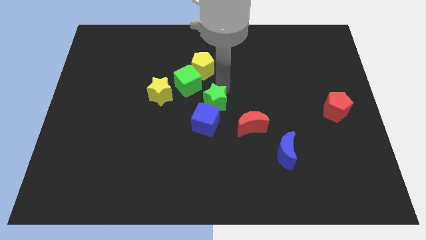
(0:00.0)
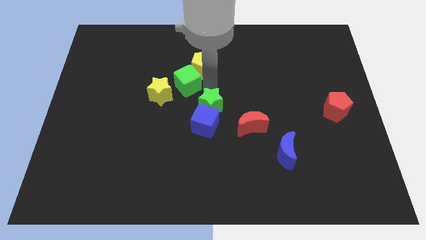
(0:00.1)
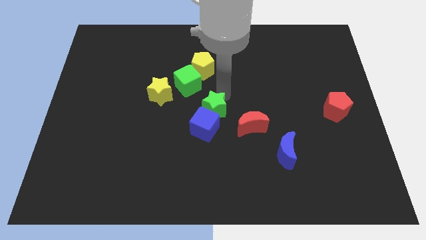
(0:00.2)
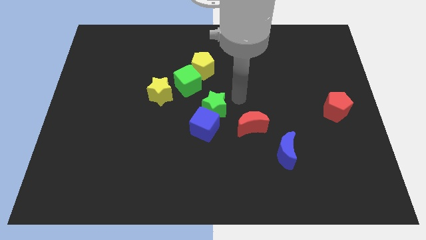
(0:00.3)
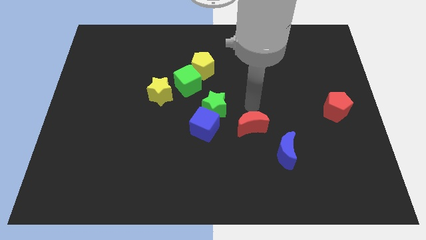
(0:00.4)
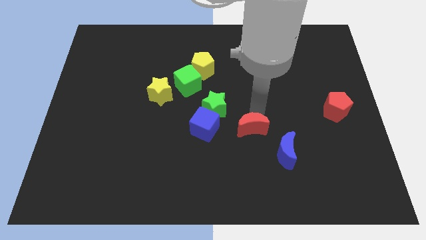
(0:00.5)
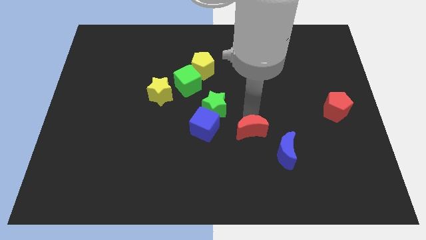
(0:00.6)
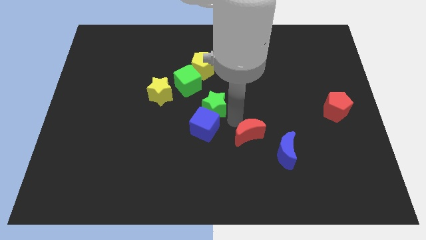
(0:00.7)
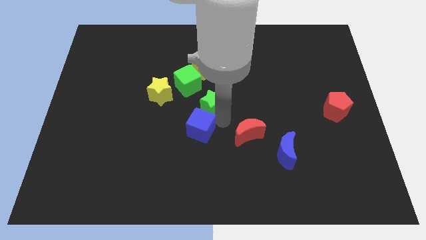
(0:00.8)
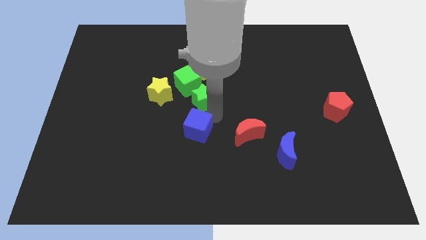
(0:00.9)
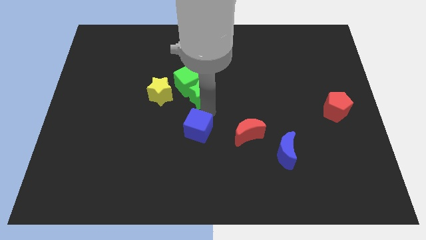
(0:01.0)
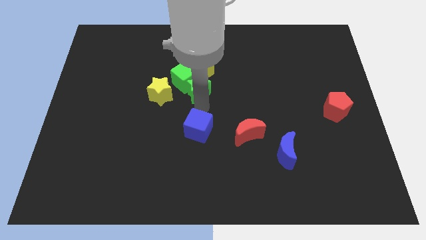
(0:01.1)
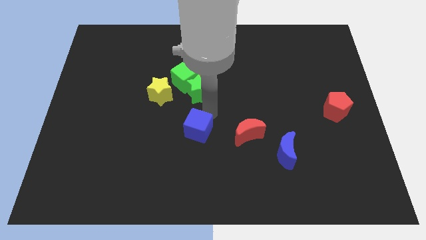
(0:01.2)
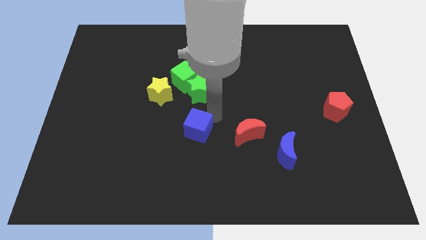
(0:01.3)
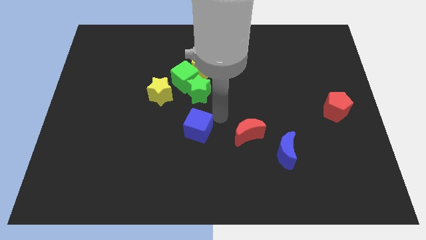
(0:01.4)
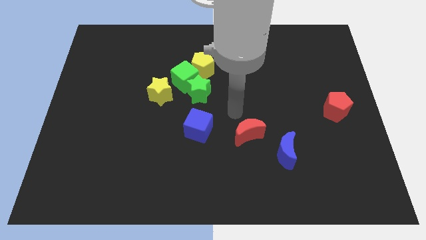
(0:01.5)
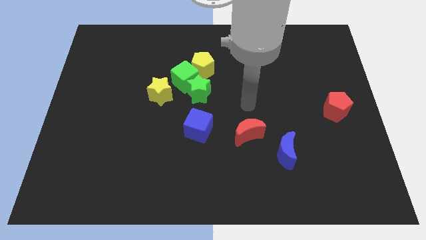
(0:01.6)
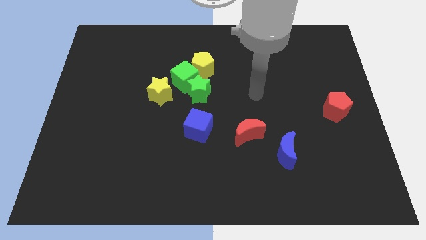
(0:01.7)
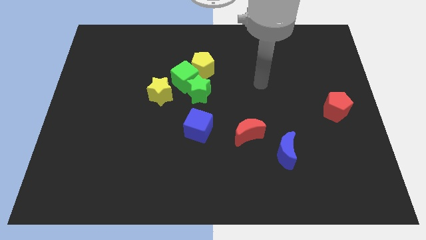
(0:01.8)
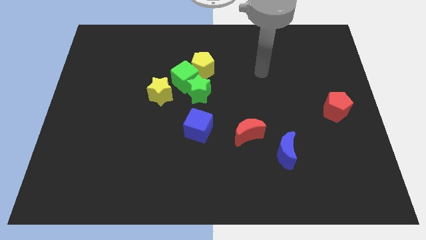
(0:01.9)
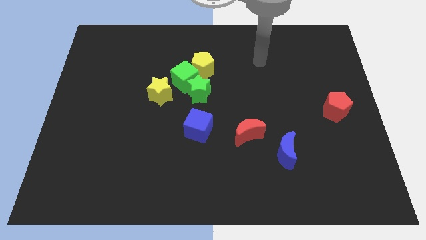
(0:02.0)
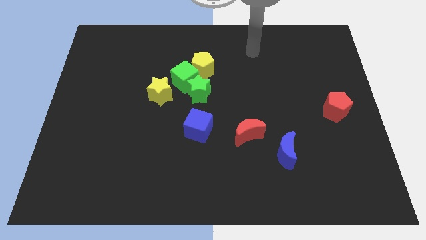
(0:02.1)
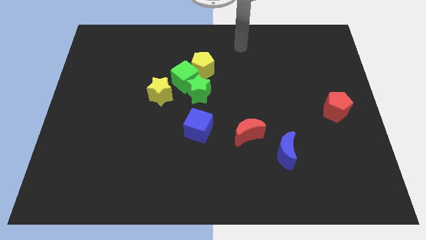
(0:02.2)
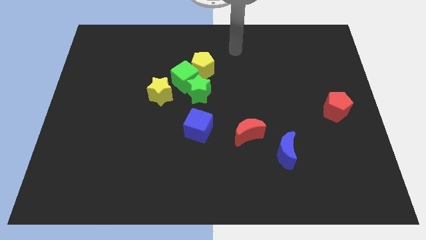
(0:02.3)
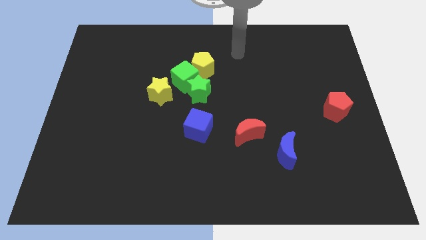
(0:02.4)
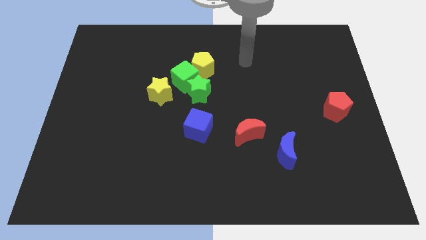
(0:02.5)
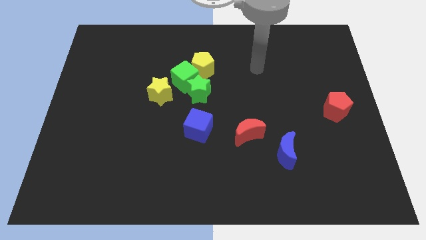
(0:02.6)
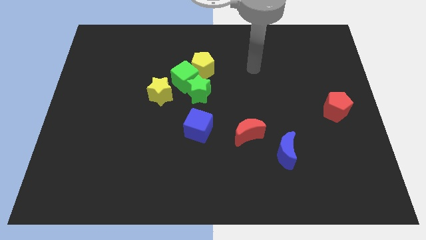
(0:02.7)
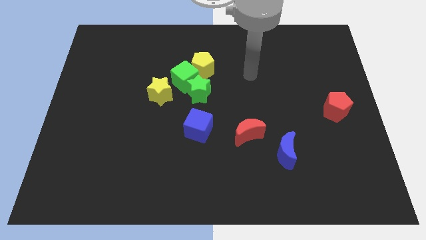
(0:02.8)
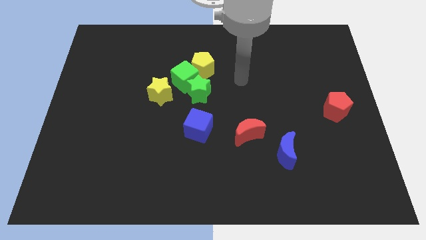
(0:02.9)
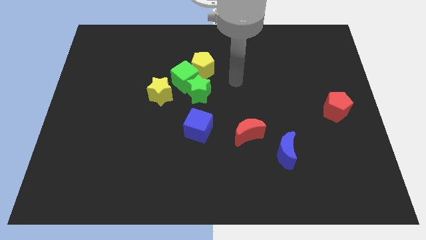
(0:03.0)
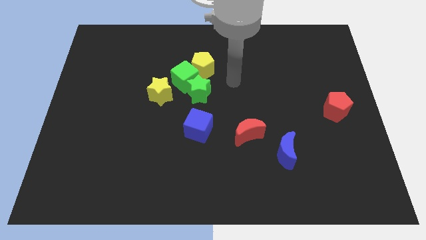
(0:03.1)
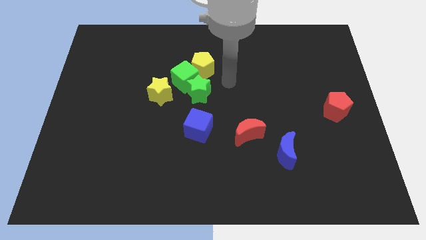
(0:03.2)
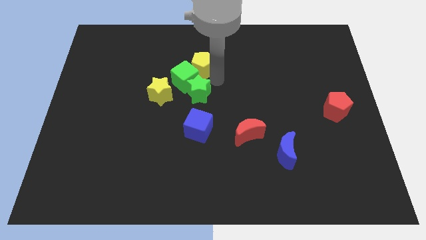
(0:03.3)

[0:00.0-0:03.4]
push green star into the green cube

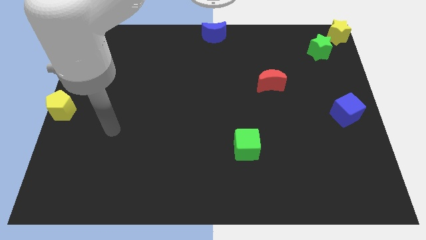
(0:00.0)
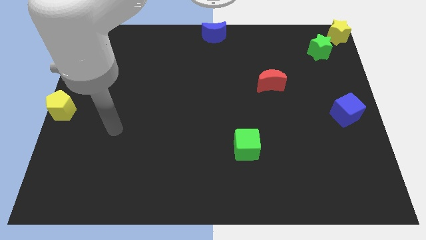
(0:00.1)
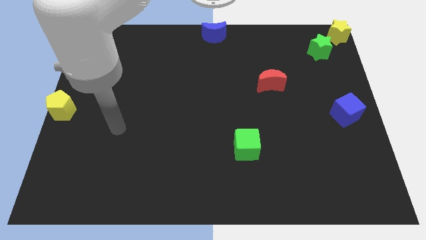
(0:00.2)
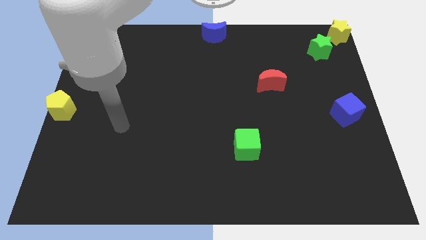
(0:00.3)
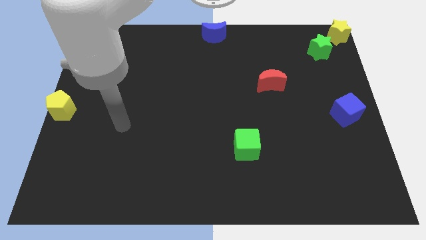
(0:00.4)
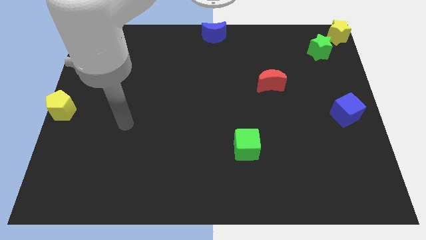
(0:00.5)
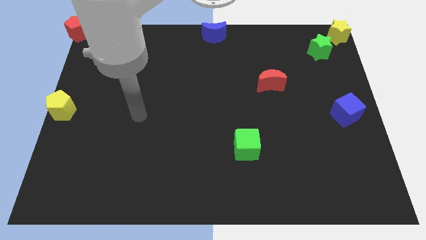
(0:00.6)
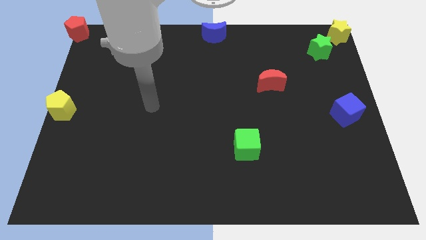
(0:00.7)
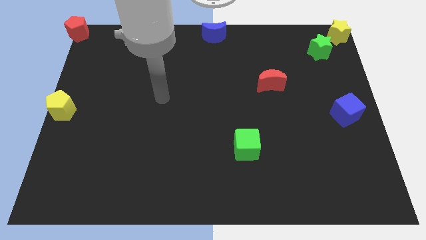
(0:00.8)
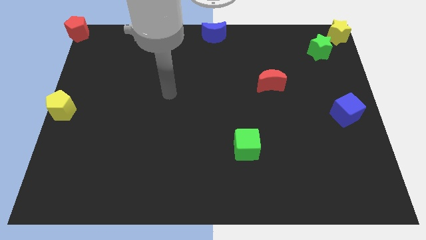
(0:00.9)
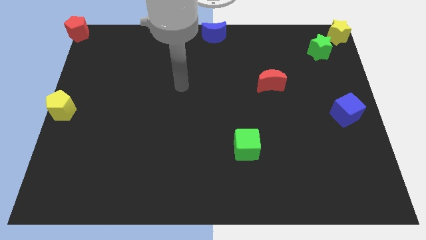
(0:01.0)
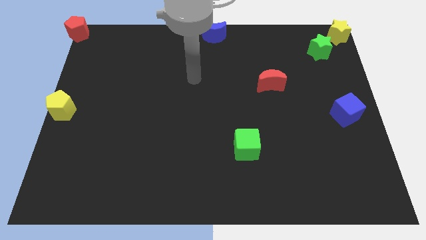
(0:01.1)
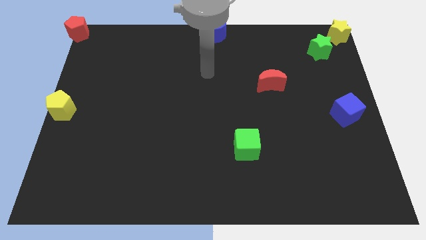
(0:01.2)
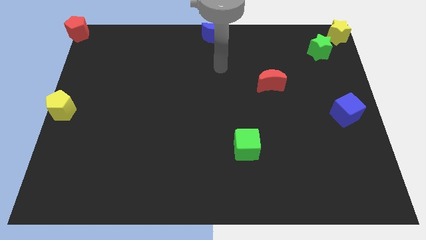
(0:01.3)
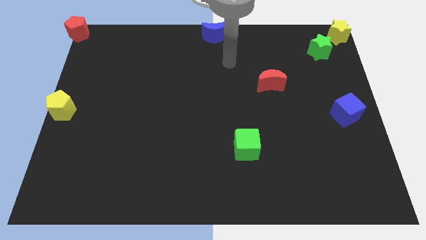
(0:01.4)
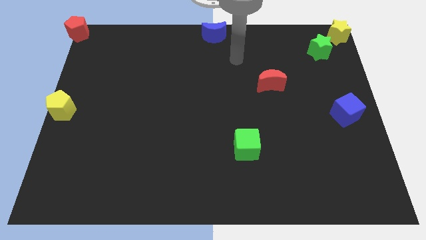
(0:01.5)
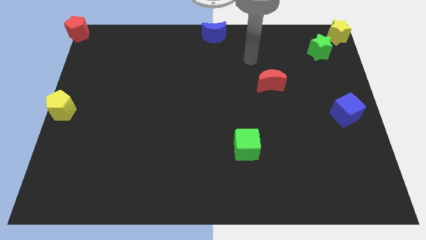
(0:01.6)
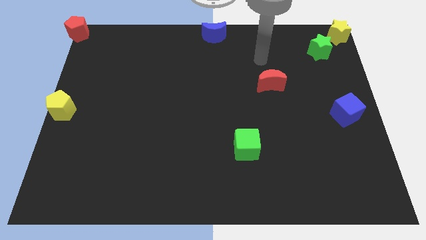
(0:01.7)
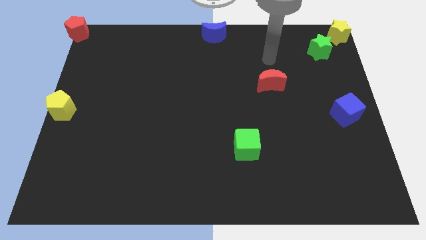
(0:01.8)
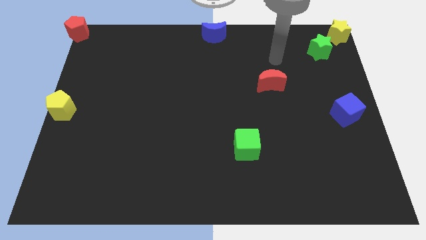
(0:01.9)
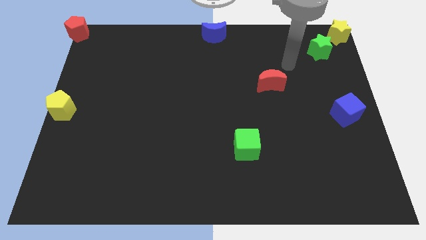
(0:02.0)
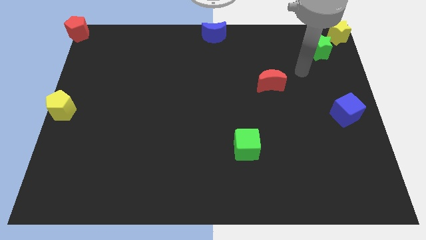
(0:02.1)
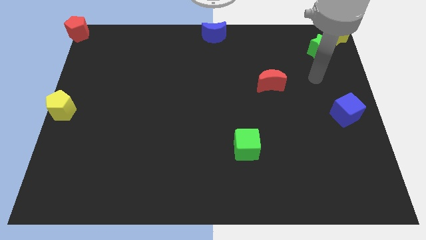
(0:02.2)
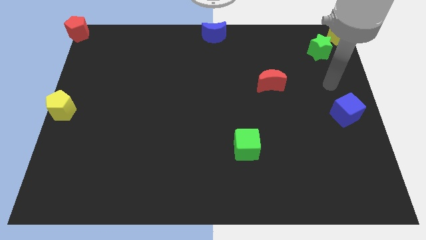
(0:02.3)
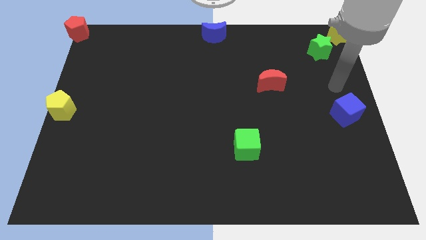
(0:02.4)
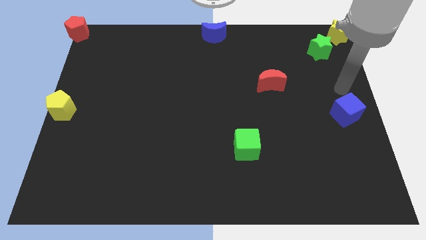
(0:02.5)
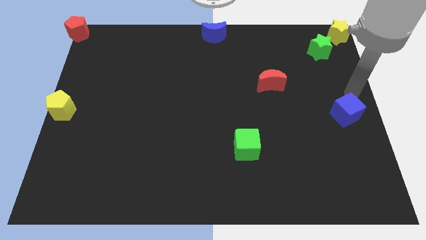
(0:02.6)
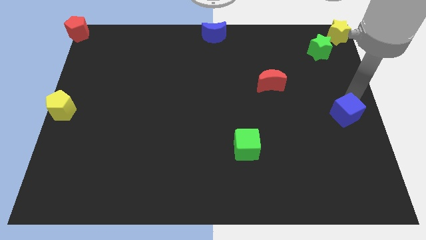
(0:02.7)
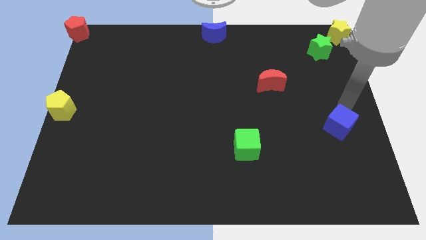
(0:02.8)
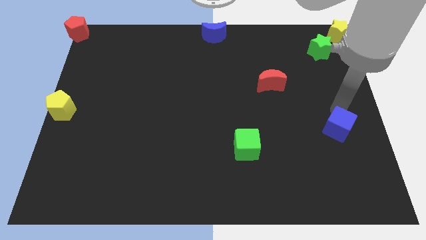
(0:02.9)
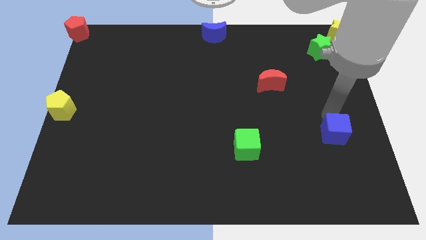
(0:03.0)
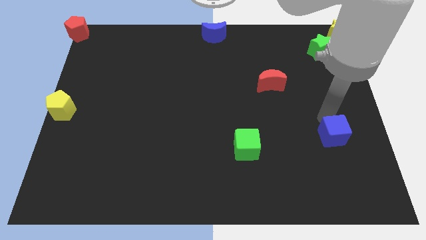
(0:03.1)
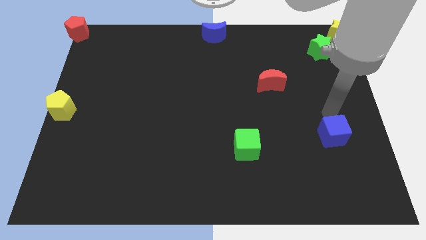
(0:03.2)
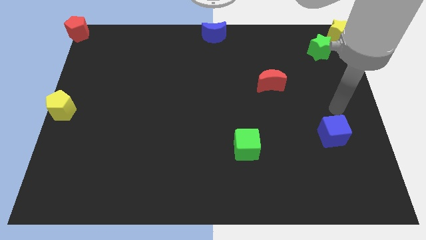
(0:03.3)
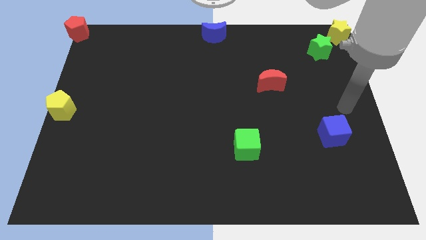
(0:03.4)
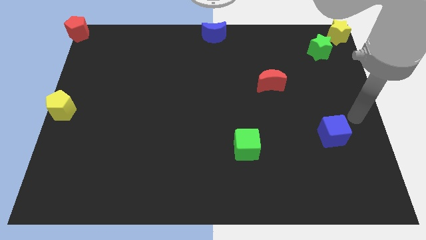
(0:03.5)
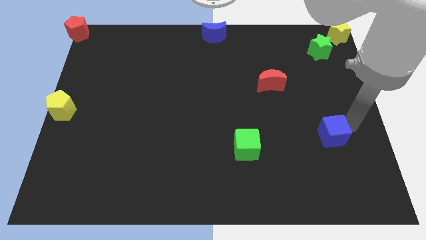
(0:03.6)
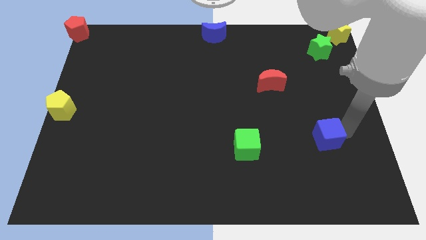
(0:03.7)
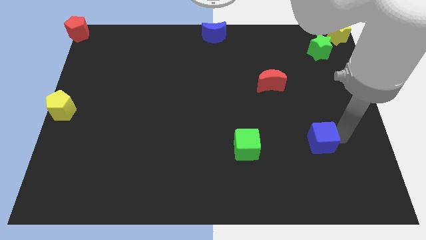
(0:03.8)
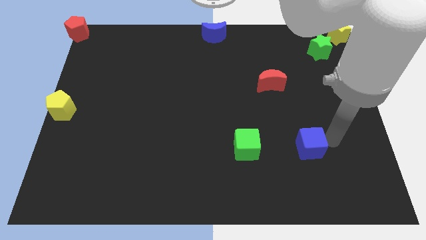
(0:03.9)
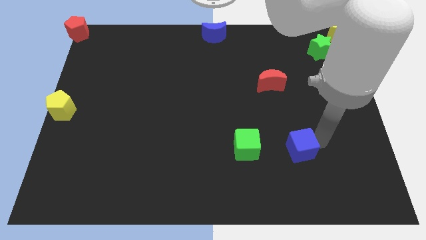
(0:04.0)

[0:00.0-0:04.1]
move blue cube right beside the green cube

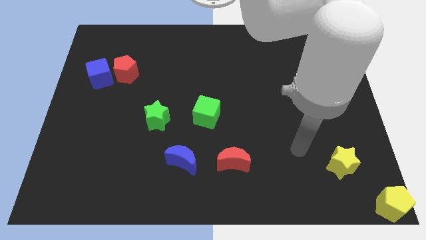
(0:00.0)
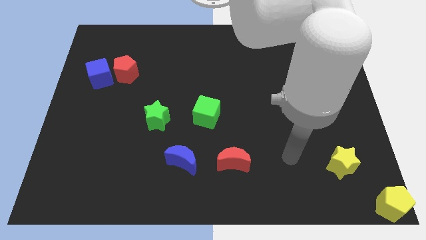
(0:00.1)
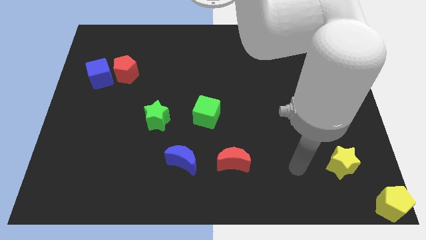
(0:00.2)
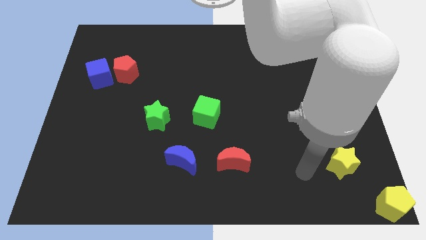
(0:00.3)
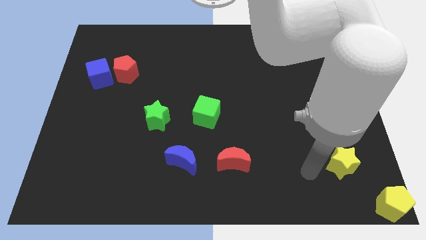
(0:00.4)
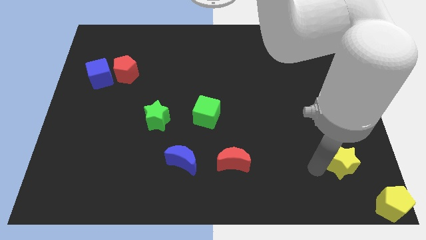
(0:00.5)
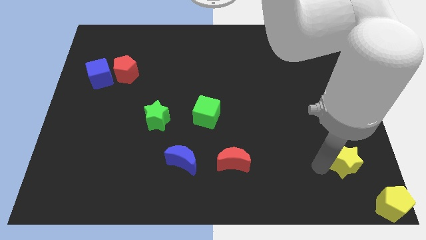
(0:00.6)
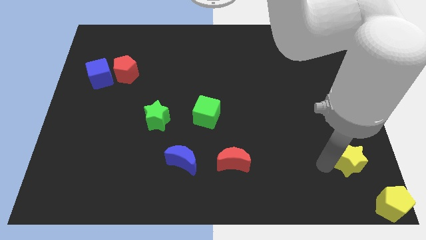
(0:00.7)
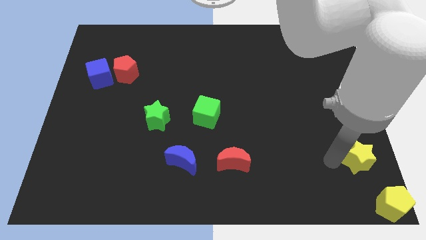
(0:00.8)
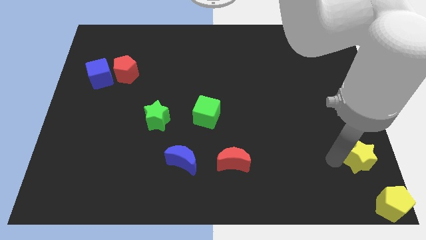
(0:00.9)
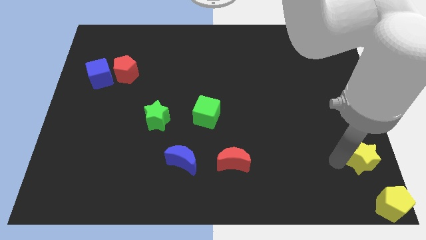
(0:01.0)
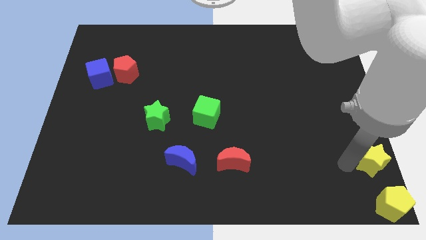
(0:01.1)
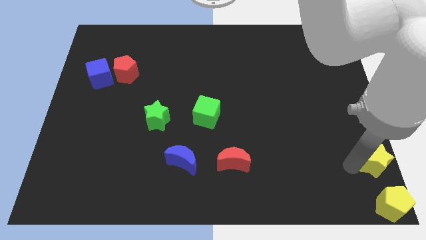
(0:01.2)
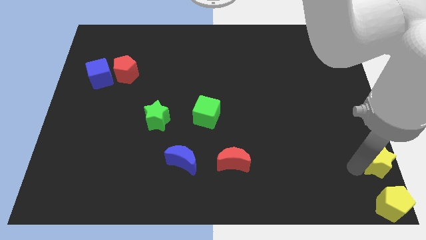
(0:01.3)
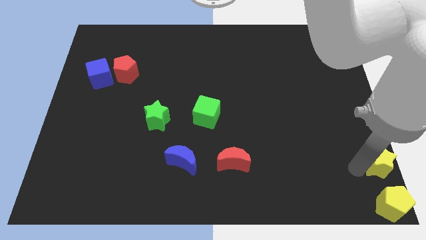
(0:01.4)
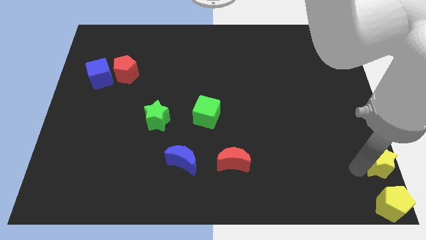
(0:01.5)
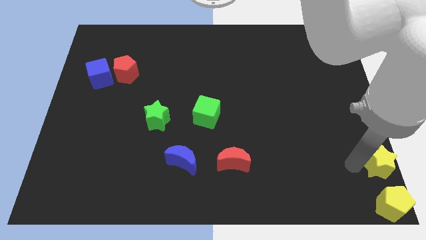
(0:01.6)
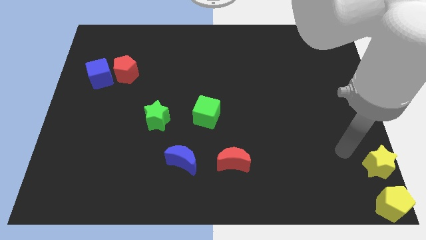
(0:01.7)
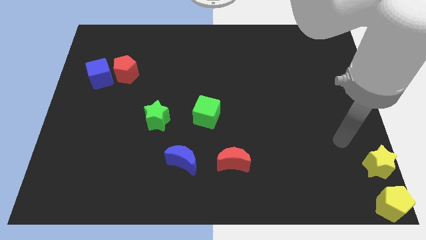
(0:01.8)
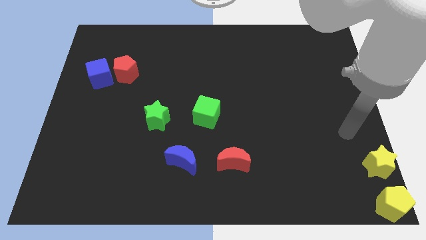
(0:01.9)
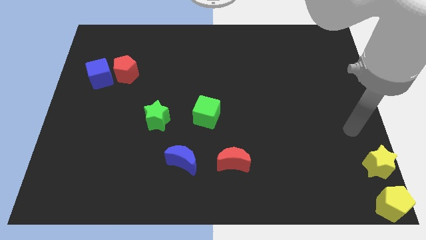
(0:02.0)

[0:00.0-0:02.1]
move yellow star above the yellow pentagon
